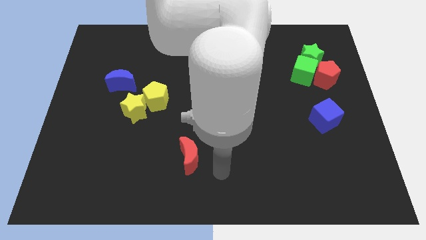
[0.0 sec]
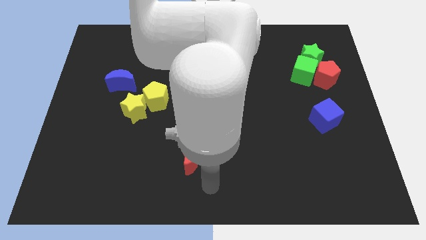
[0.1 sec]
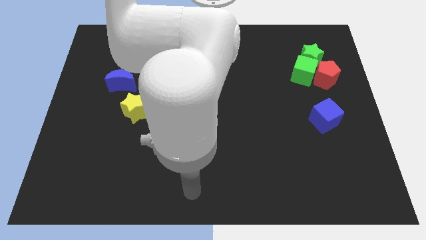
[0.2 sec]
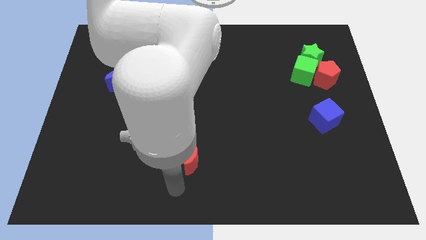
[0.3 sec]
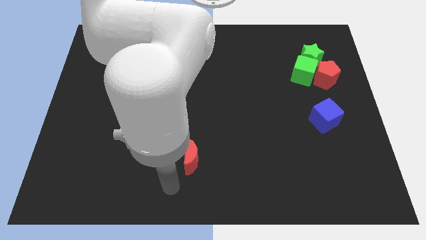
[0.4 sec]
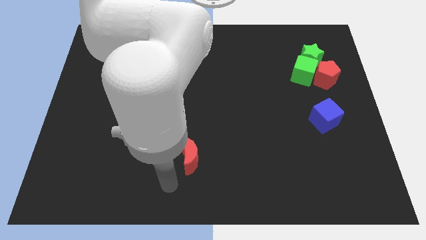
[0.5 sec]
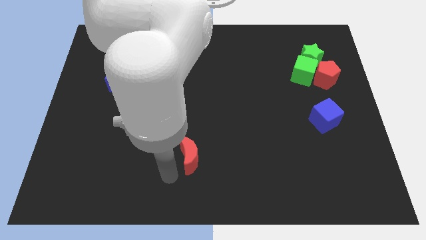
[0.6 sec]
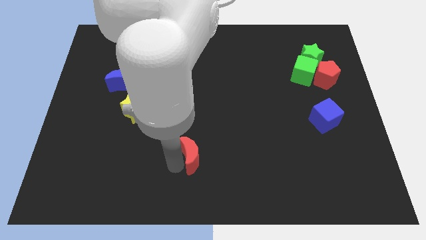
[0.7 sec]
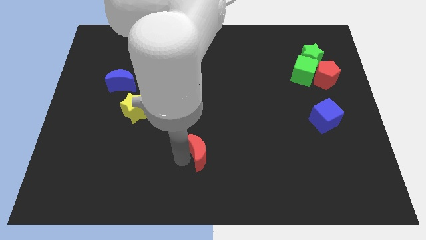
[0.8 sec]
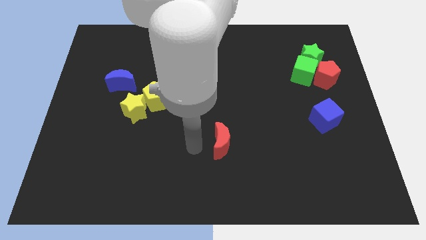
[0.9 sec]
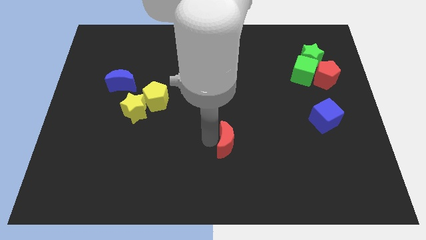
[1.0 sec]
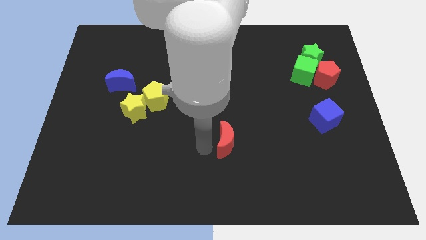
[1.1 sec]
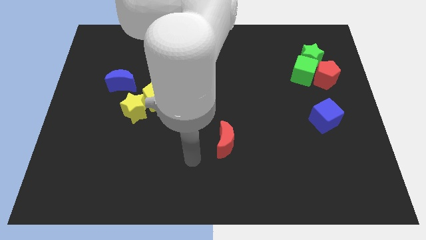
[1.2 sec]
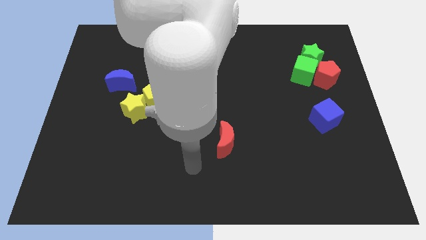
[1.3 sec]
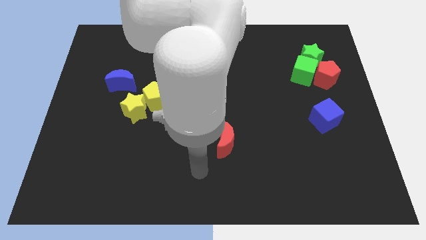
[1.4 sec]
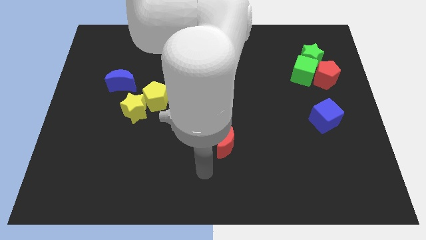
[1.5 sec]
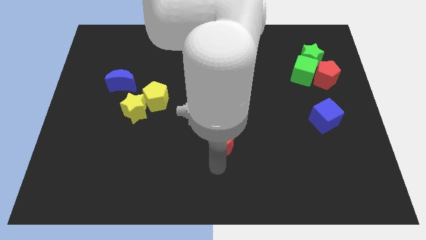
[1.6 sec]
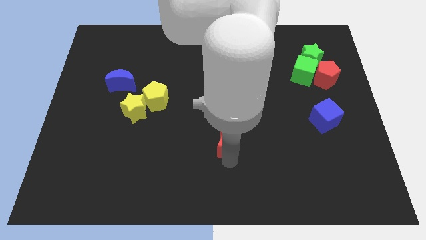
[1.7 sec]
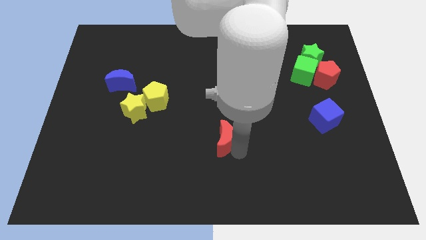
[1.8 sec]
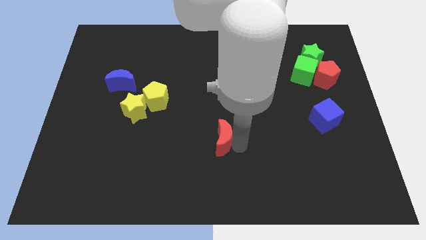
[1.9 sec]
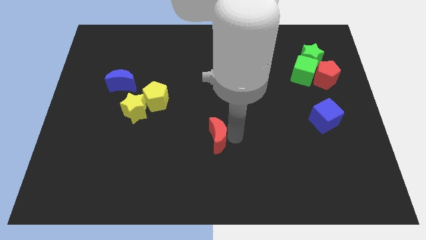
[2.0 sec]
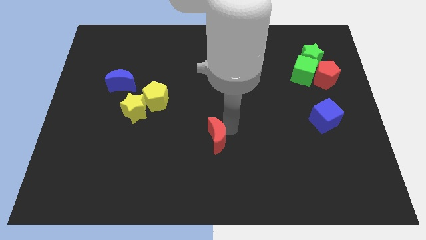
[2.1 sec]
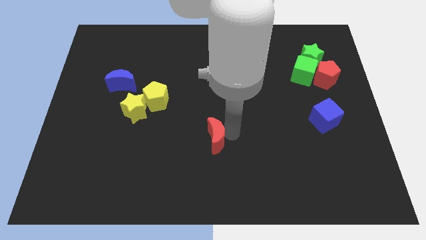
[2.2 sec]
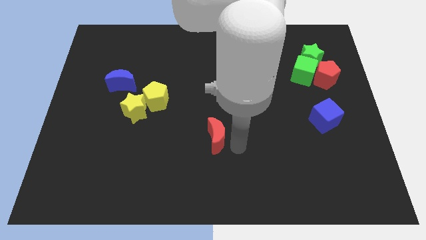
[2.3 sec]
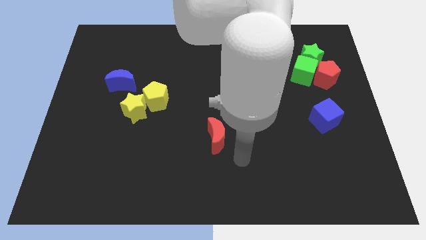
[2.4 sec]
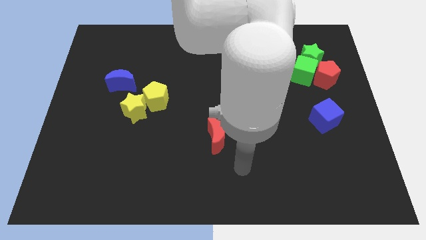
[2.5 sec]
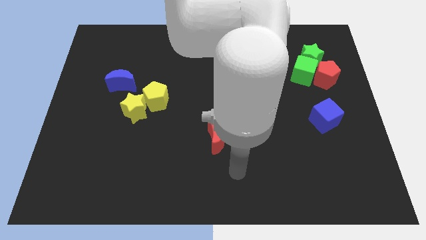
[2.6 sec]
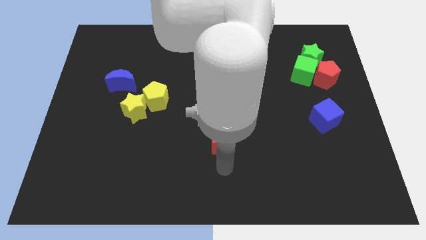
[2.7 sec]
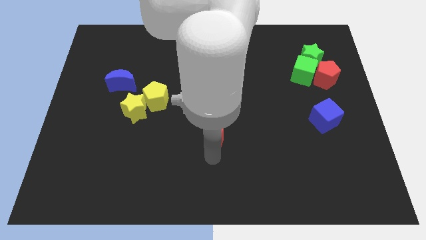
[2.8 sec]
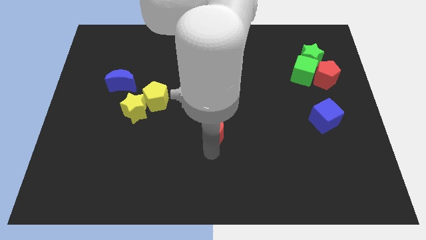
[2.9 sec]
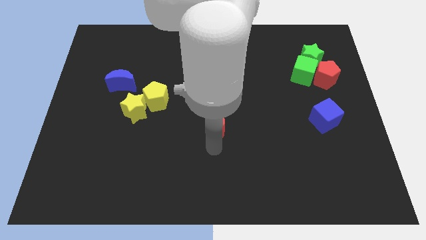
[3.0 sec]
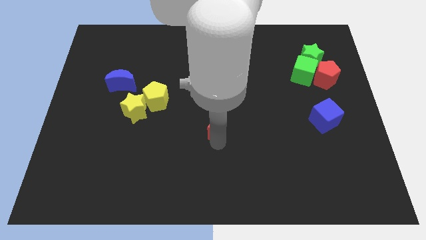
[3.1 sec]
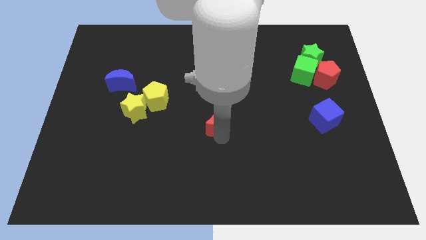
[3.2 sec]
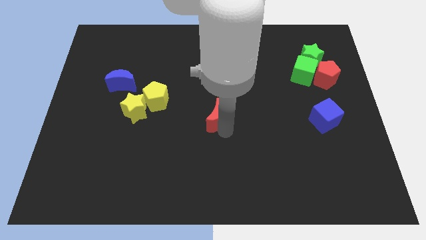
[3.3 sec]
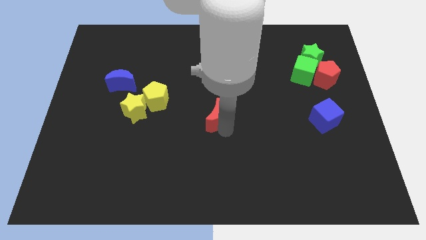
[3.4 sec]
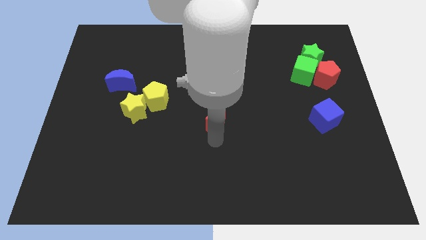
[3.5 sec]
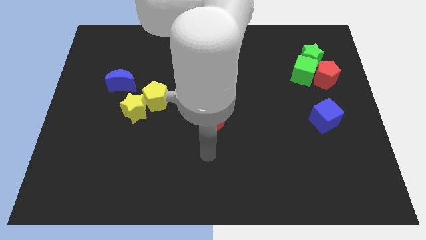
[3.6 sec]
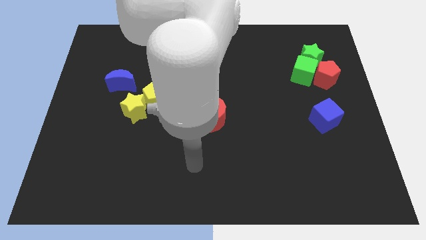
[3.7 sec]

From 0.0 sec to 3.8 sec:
move the red crescent towards the center of the board

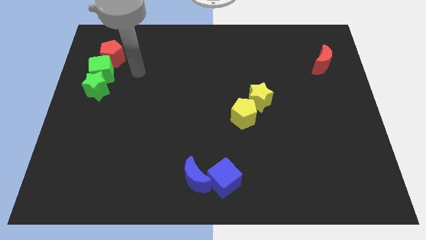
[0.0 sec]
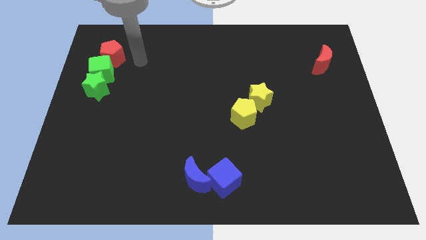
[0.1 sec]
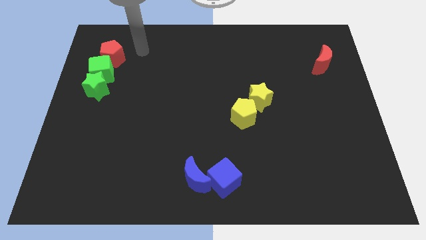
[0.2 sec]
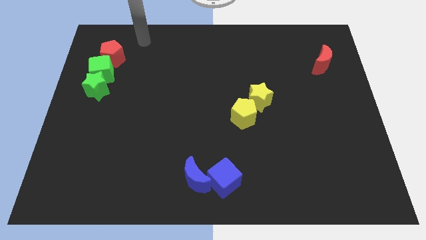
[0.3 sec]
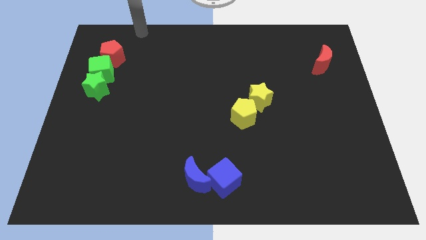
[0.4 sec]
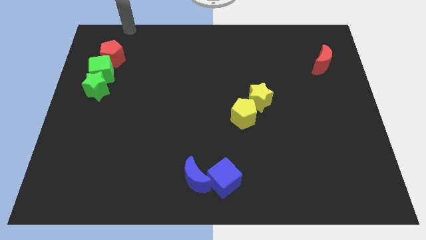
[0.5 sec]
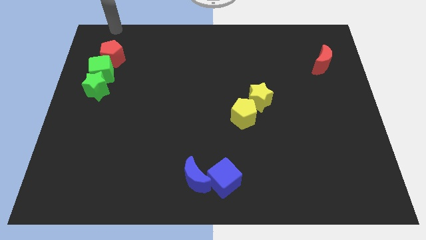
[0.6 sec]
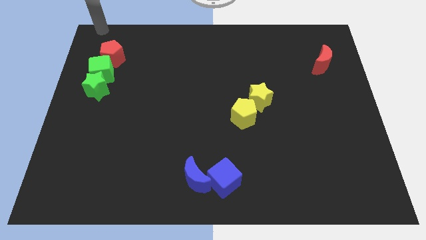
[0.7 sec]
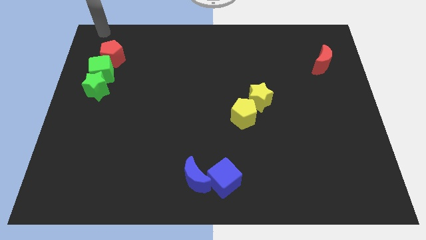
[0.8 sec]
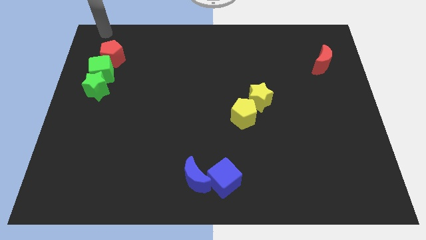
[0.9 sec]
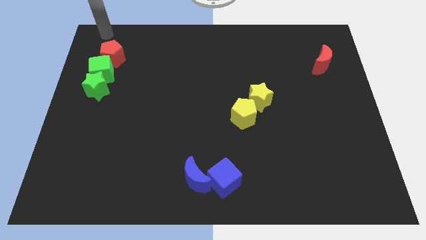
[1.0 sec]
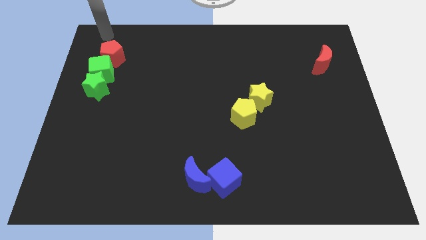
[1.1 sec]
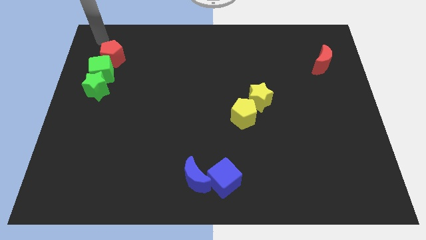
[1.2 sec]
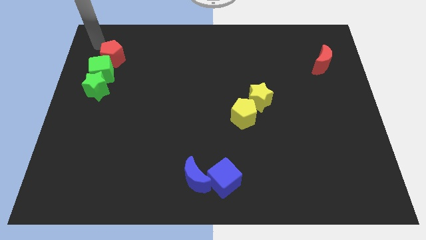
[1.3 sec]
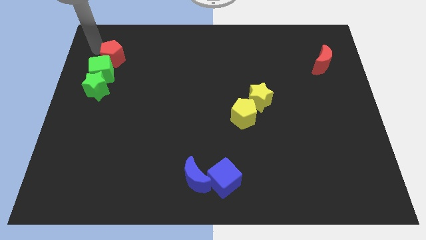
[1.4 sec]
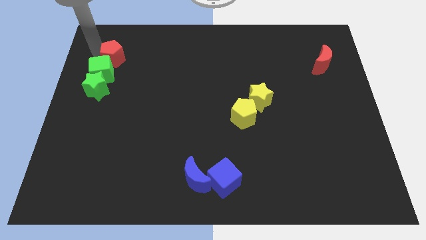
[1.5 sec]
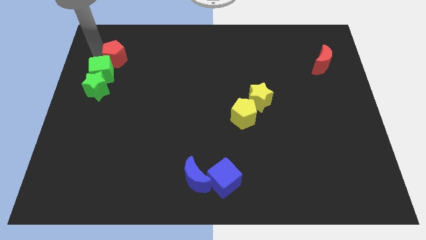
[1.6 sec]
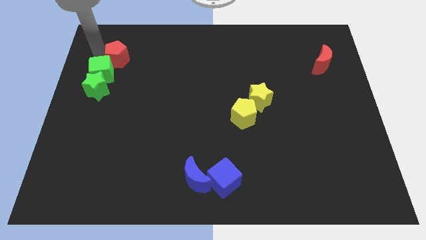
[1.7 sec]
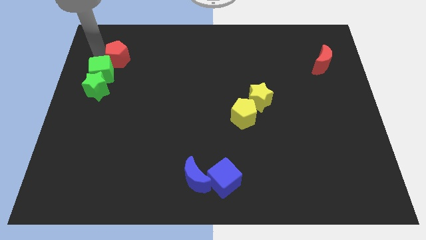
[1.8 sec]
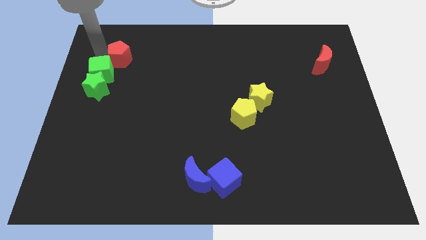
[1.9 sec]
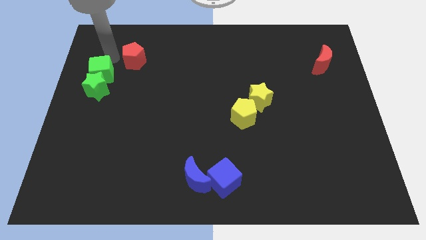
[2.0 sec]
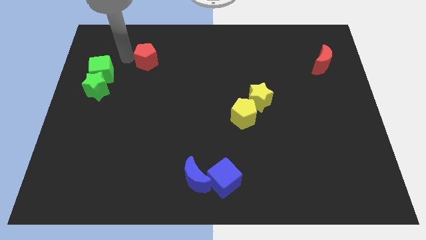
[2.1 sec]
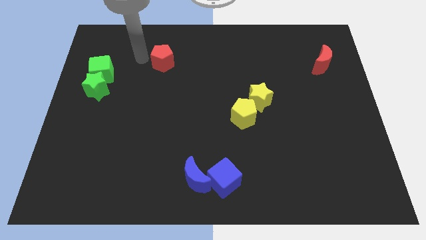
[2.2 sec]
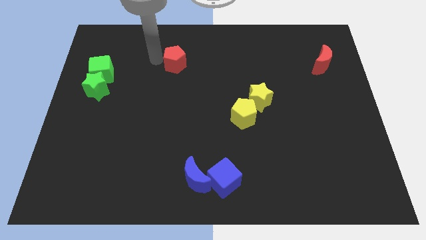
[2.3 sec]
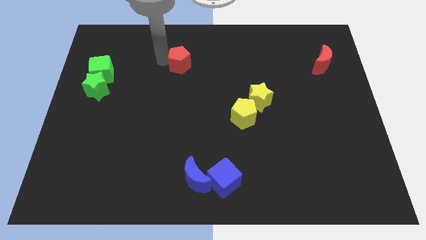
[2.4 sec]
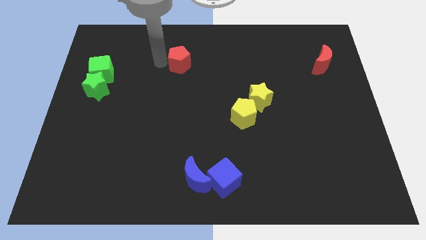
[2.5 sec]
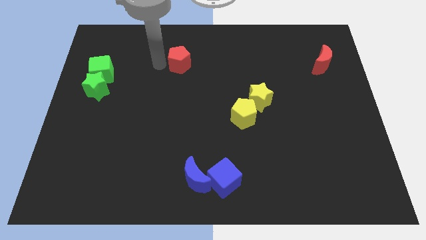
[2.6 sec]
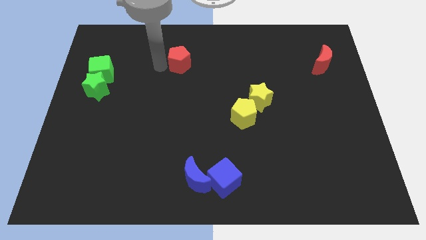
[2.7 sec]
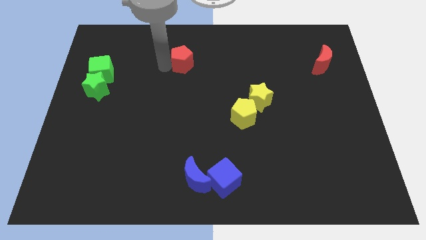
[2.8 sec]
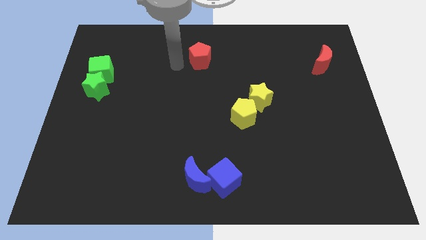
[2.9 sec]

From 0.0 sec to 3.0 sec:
move red pentagon to the center of the board

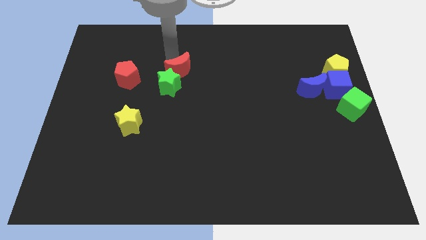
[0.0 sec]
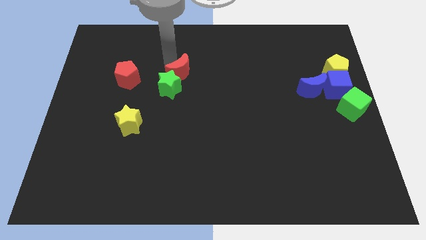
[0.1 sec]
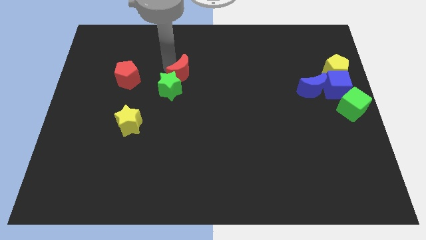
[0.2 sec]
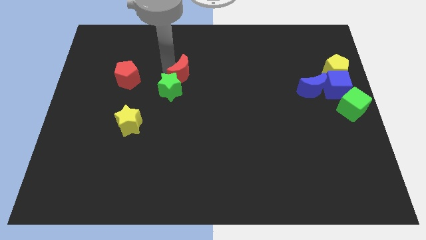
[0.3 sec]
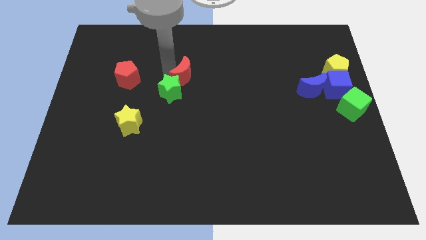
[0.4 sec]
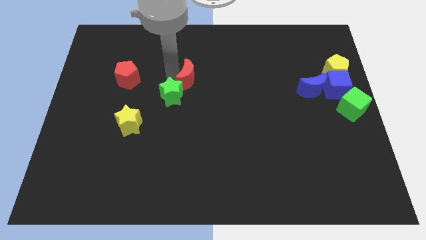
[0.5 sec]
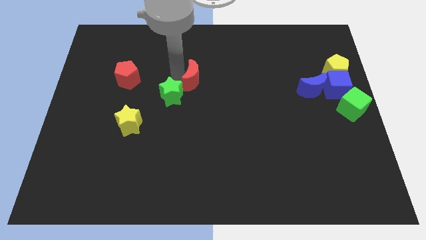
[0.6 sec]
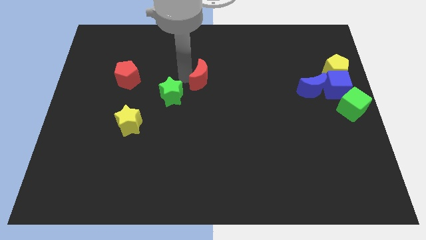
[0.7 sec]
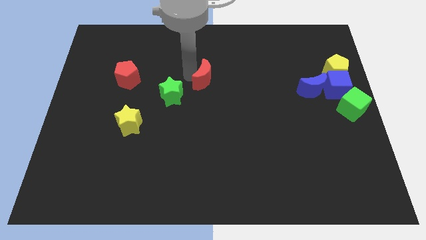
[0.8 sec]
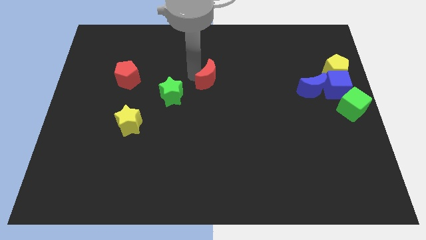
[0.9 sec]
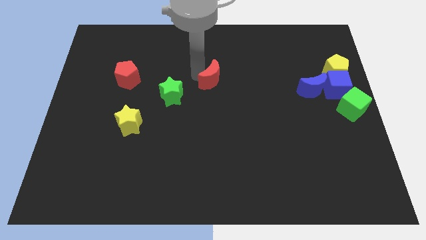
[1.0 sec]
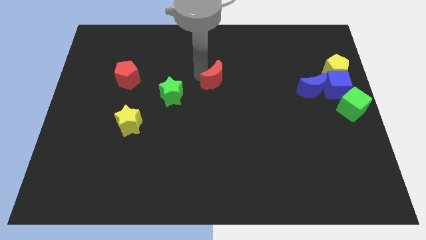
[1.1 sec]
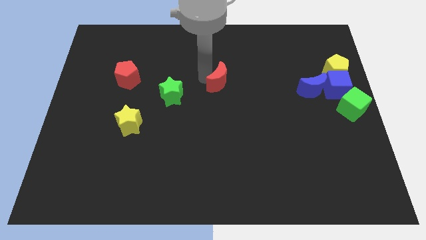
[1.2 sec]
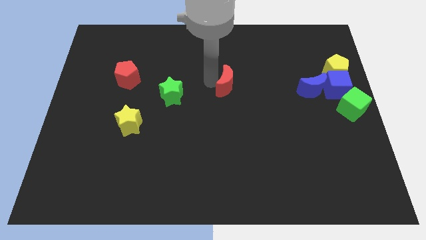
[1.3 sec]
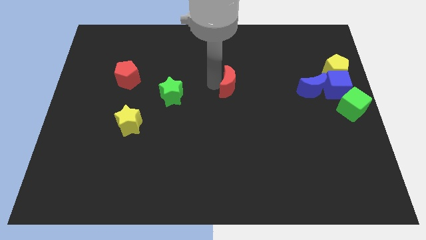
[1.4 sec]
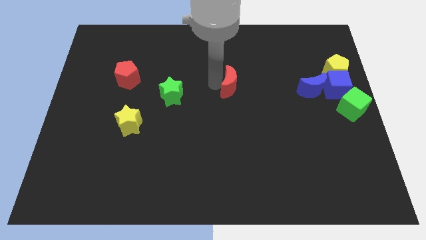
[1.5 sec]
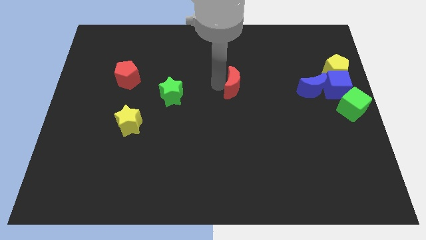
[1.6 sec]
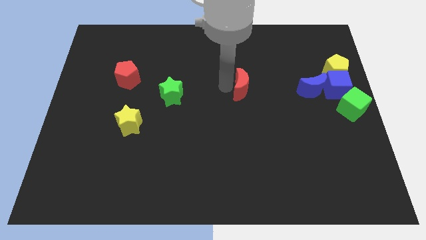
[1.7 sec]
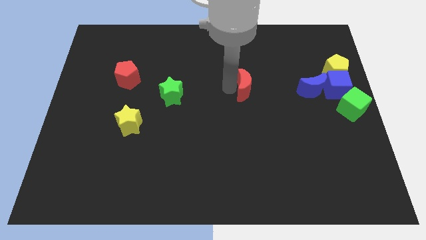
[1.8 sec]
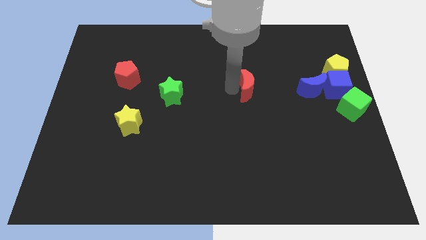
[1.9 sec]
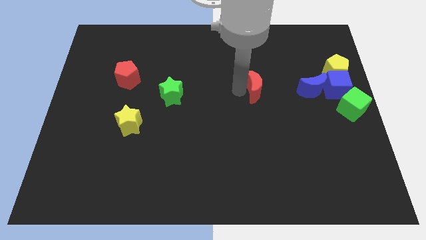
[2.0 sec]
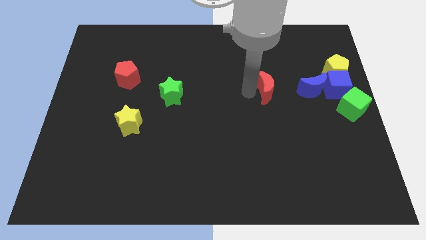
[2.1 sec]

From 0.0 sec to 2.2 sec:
separate red moon from green star
